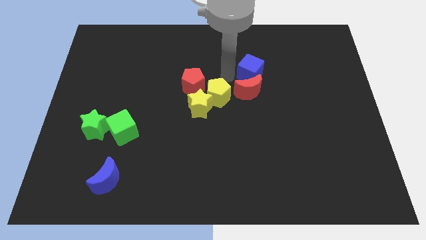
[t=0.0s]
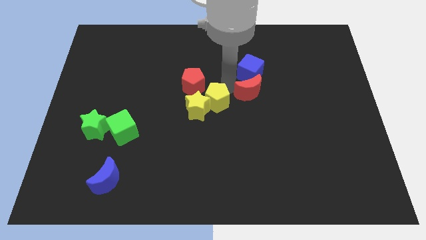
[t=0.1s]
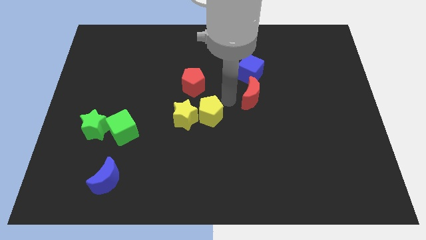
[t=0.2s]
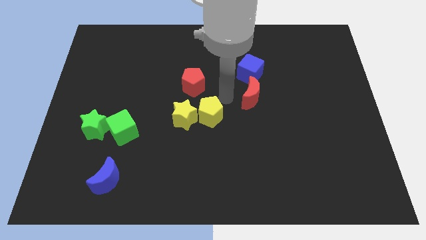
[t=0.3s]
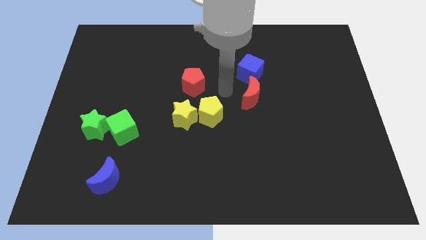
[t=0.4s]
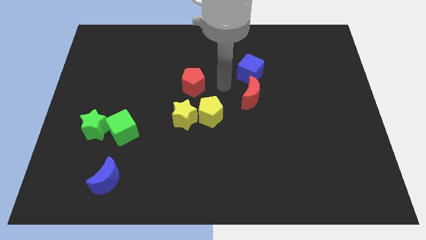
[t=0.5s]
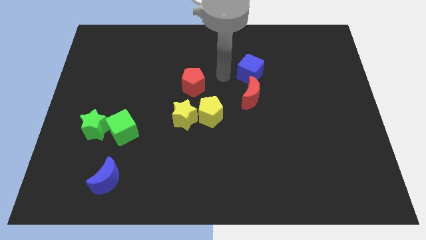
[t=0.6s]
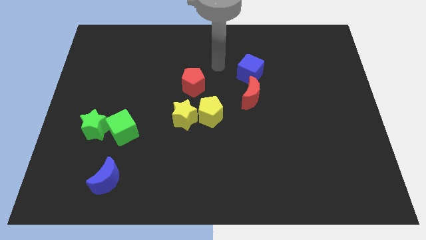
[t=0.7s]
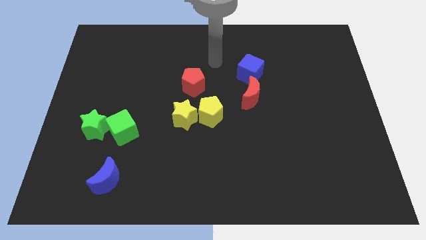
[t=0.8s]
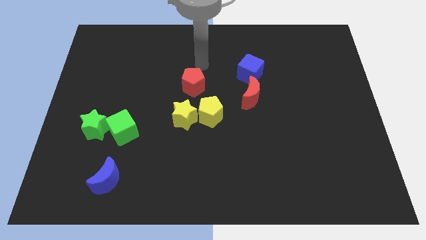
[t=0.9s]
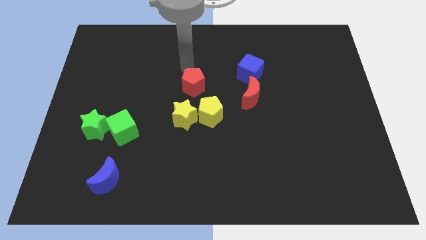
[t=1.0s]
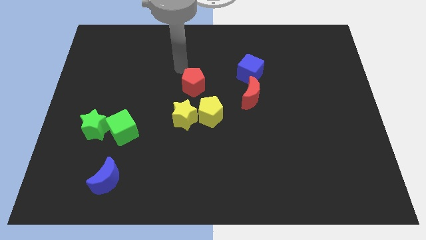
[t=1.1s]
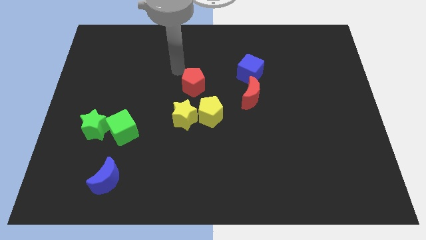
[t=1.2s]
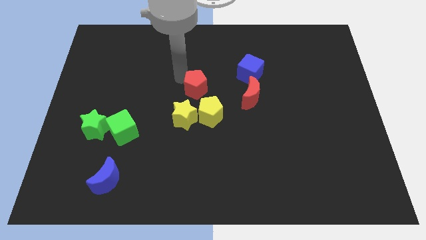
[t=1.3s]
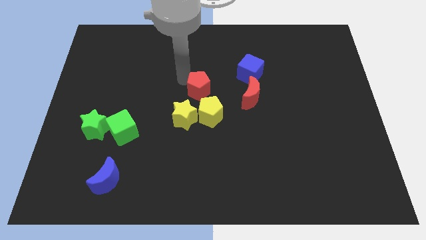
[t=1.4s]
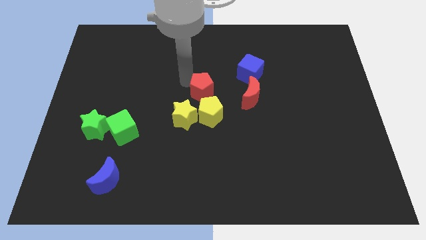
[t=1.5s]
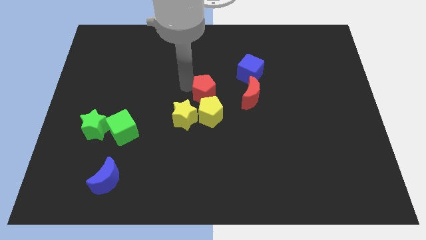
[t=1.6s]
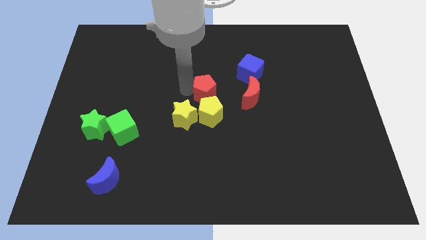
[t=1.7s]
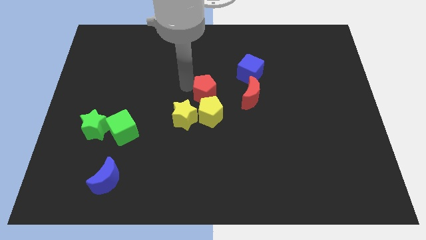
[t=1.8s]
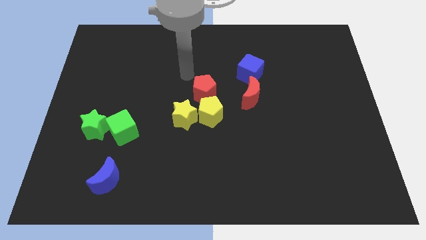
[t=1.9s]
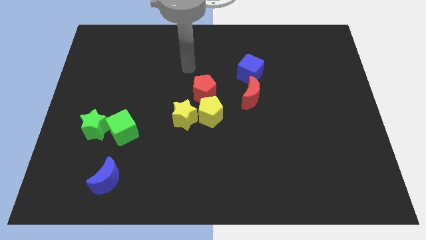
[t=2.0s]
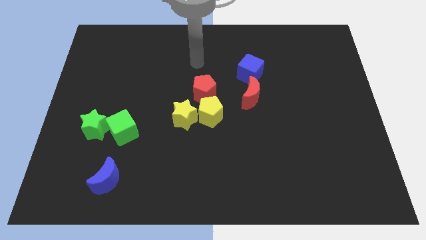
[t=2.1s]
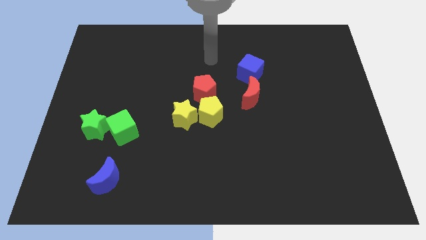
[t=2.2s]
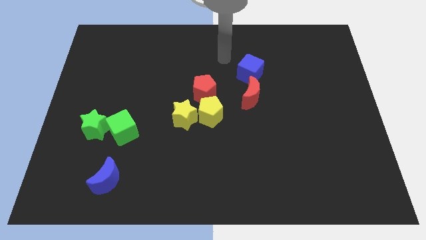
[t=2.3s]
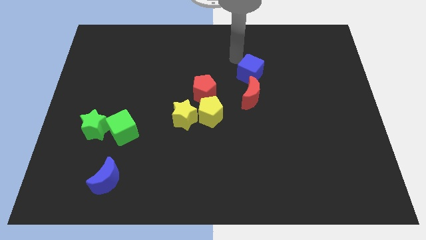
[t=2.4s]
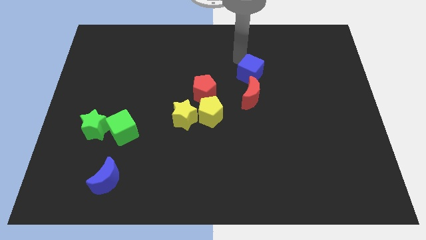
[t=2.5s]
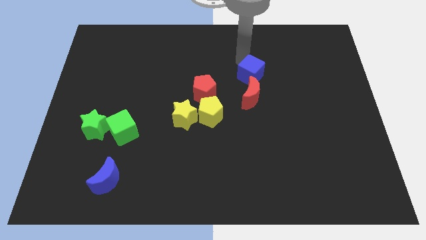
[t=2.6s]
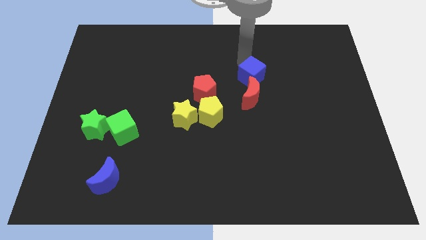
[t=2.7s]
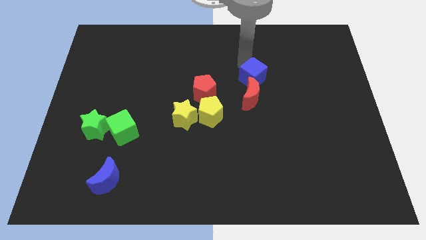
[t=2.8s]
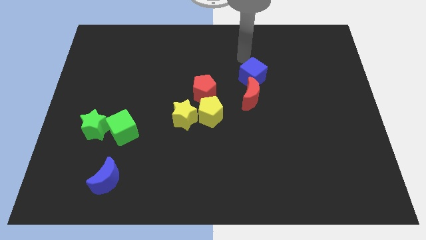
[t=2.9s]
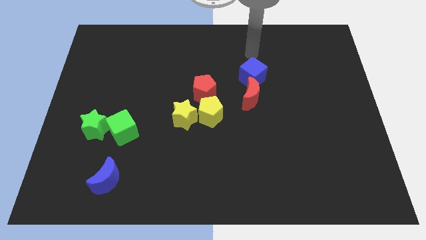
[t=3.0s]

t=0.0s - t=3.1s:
place the red pentagon on top of the yellow pentagon

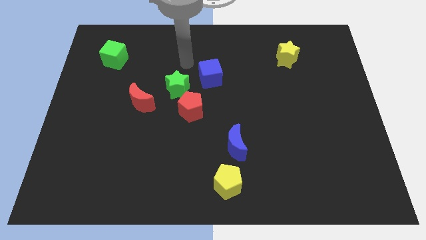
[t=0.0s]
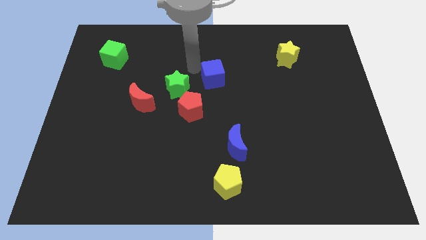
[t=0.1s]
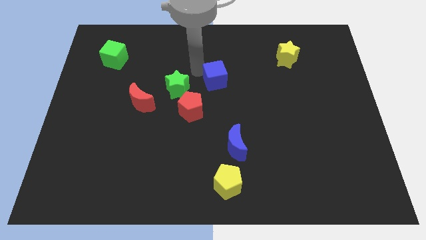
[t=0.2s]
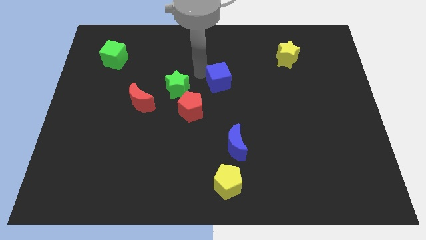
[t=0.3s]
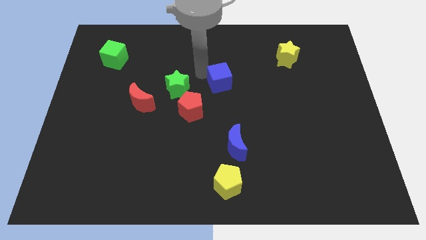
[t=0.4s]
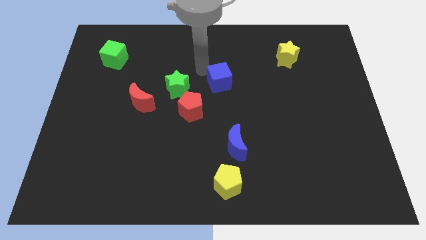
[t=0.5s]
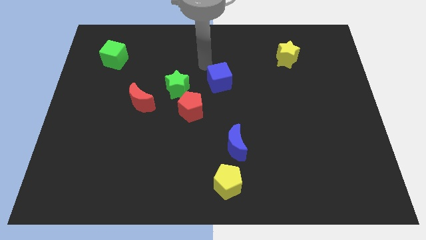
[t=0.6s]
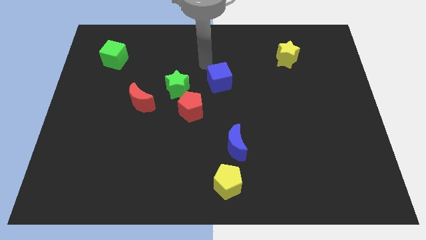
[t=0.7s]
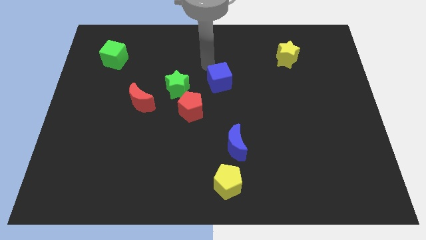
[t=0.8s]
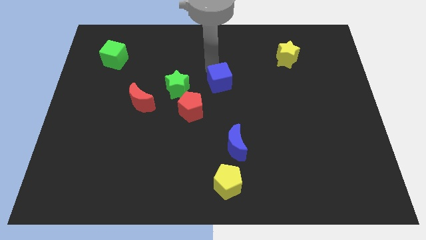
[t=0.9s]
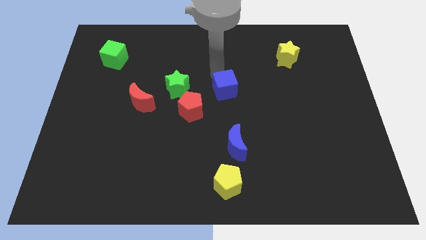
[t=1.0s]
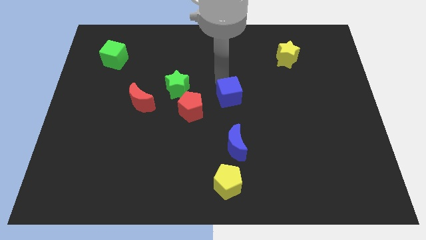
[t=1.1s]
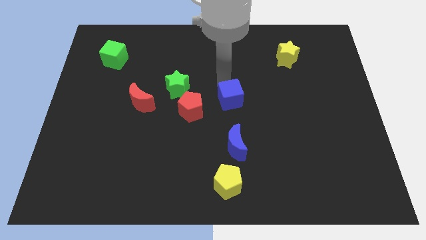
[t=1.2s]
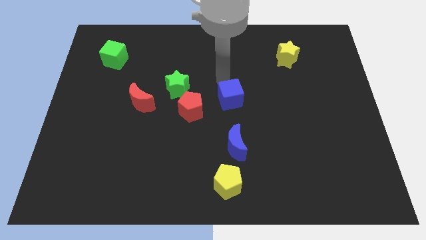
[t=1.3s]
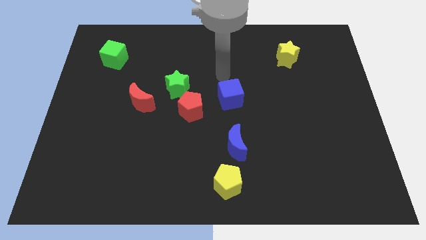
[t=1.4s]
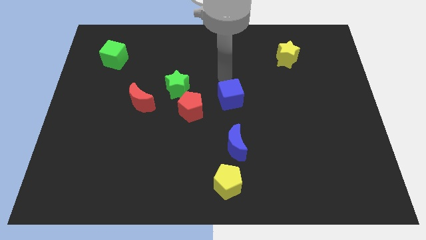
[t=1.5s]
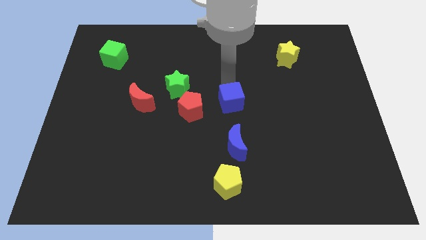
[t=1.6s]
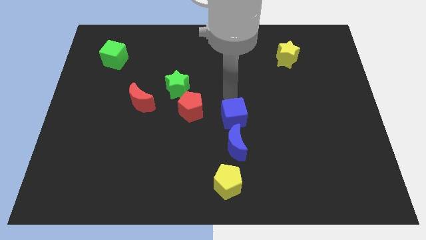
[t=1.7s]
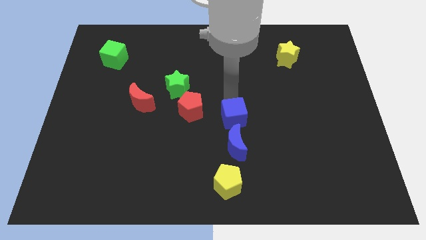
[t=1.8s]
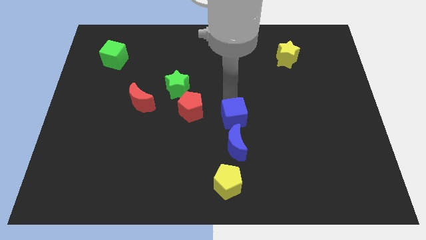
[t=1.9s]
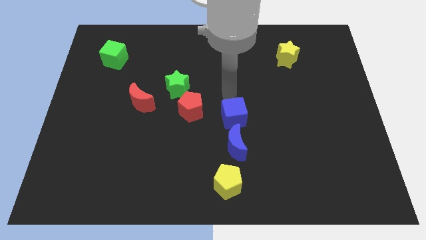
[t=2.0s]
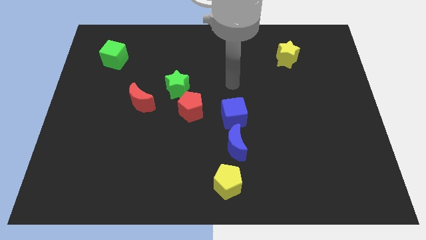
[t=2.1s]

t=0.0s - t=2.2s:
put the blue cube above the blue moon

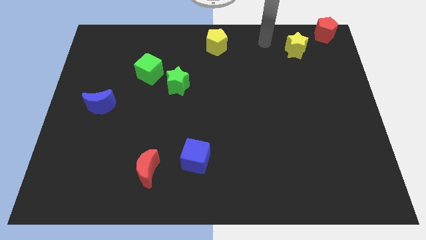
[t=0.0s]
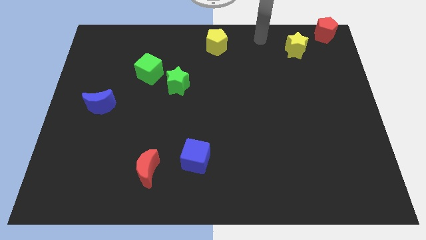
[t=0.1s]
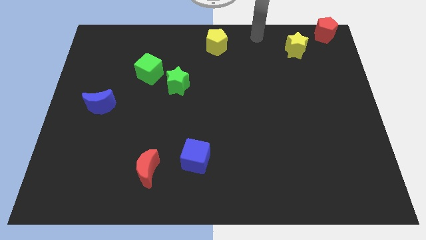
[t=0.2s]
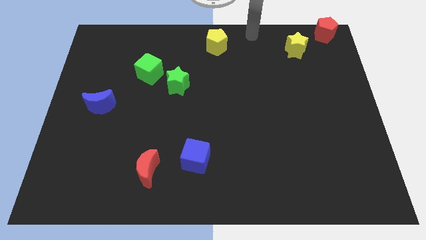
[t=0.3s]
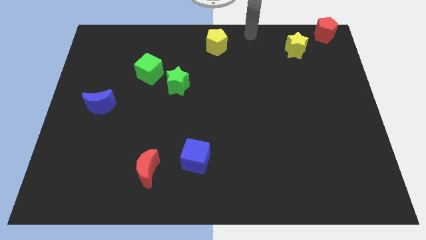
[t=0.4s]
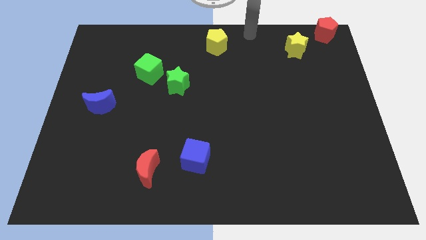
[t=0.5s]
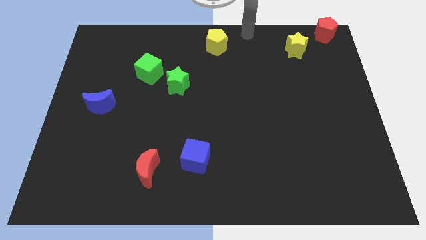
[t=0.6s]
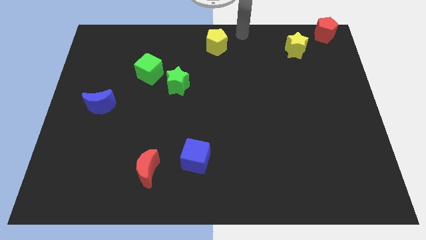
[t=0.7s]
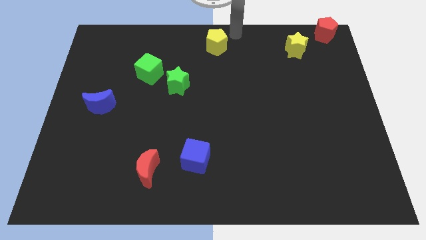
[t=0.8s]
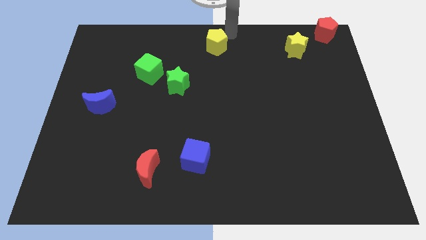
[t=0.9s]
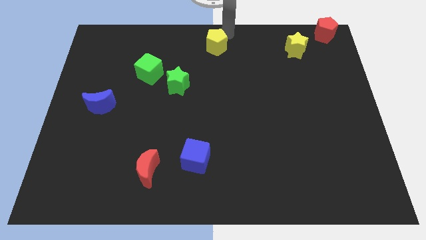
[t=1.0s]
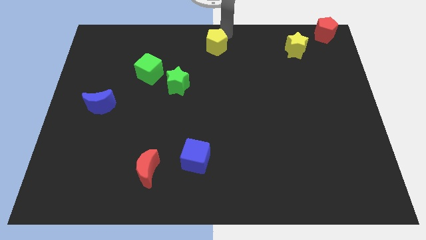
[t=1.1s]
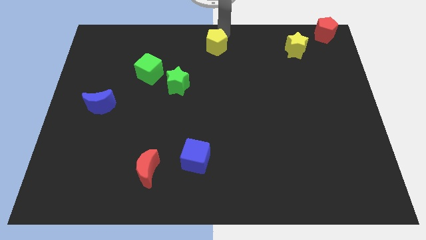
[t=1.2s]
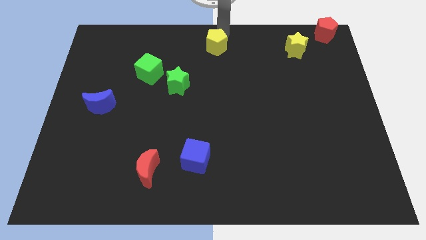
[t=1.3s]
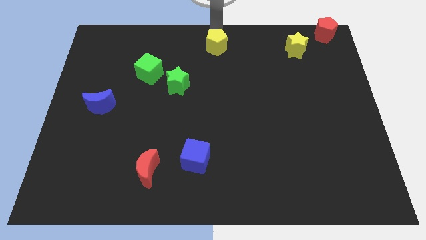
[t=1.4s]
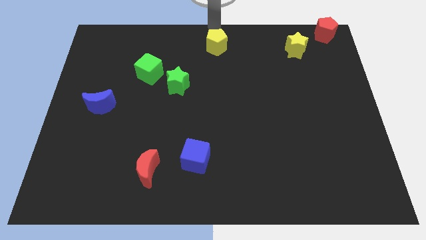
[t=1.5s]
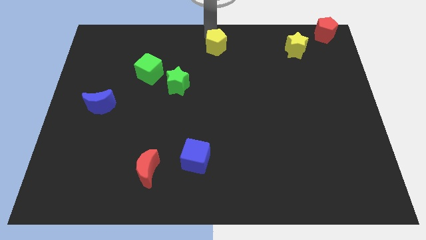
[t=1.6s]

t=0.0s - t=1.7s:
place your hand above yellow pentagon at top center of the board

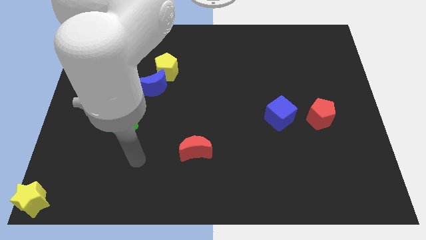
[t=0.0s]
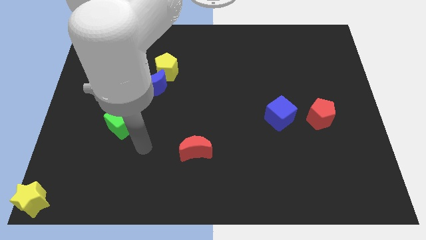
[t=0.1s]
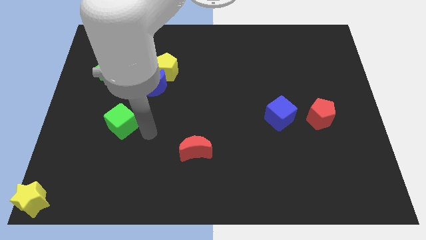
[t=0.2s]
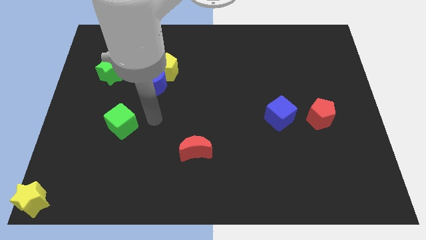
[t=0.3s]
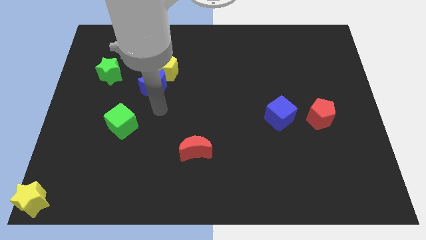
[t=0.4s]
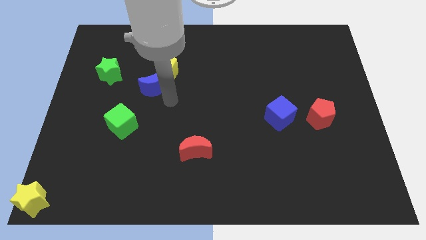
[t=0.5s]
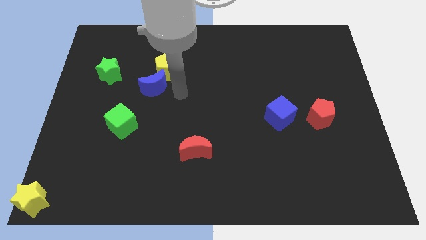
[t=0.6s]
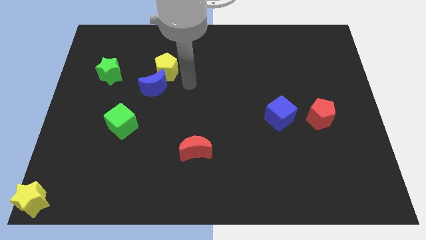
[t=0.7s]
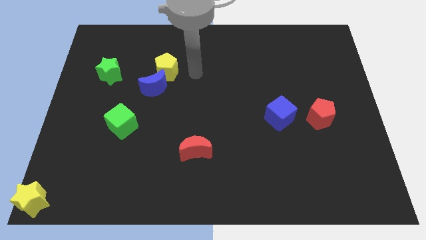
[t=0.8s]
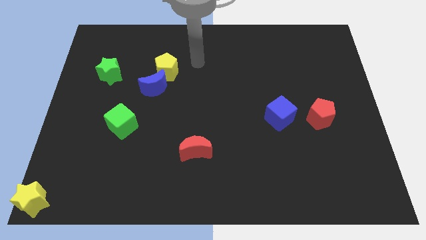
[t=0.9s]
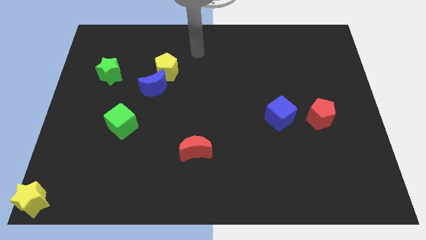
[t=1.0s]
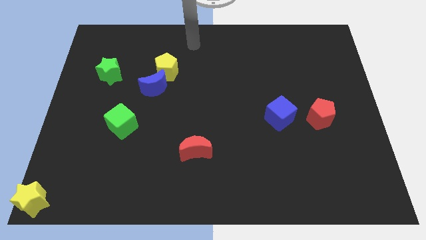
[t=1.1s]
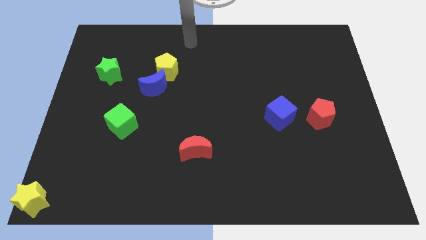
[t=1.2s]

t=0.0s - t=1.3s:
move arm to the top center

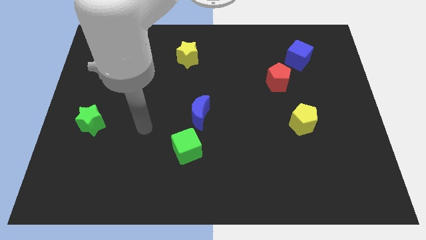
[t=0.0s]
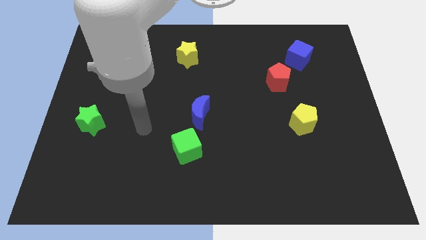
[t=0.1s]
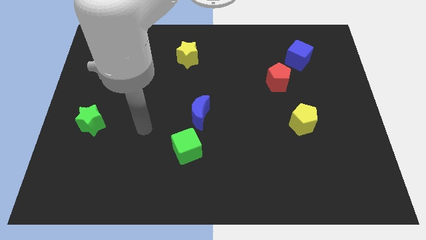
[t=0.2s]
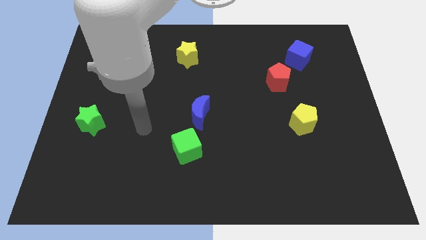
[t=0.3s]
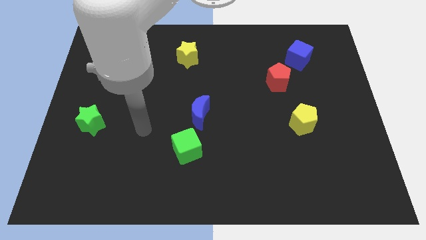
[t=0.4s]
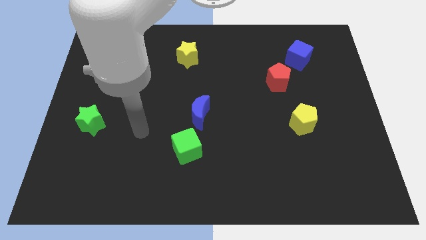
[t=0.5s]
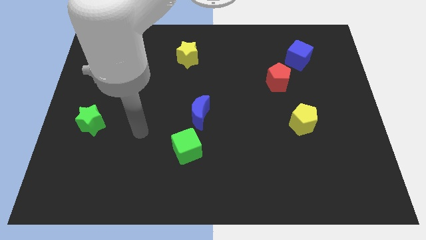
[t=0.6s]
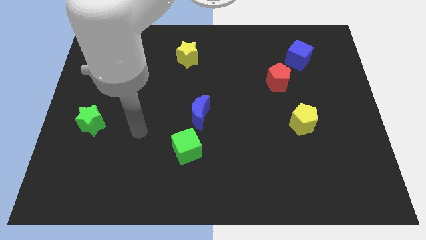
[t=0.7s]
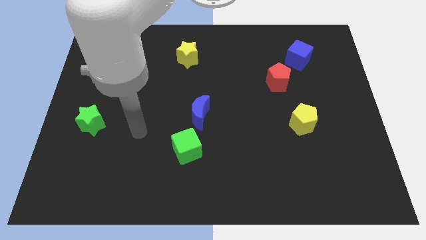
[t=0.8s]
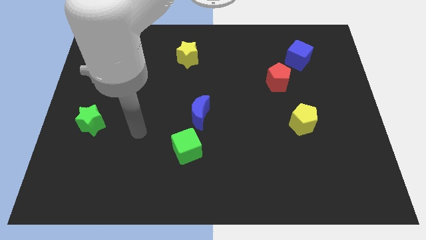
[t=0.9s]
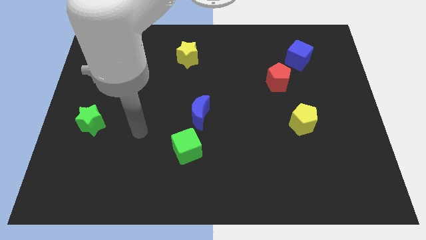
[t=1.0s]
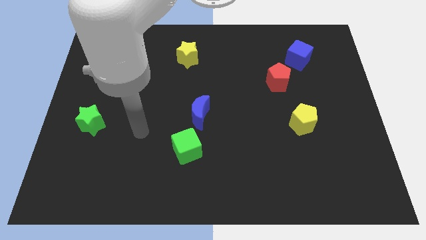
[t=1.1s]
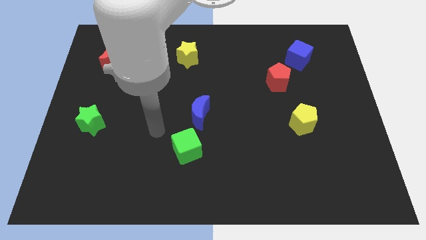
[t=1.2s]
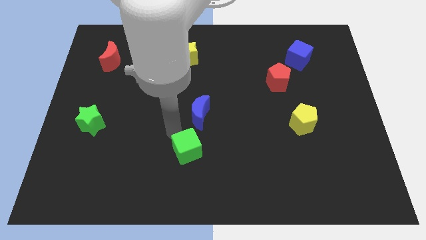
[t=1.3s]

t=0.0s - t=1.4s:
move your arm towards the green cube
